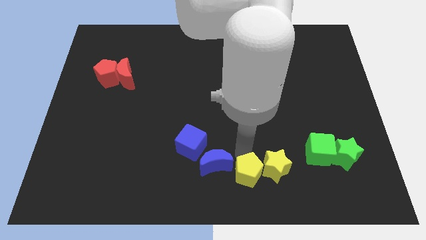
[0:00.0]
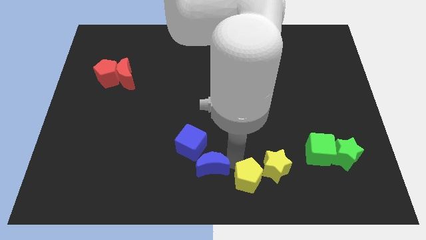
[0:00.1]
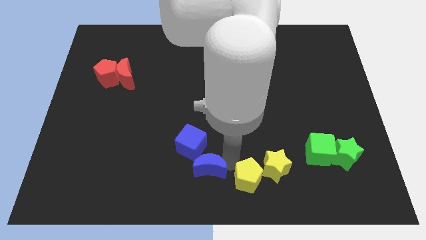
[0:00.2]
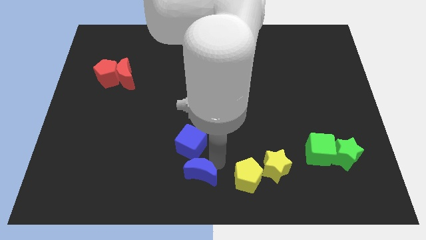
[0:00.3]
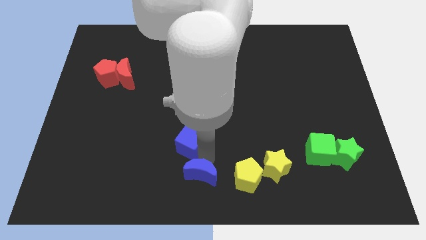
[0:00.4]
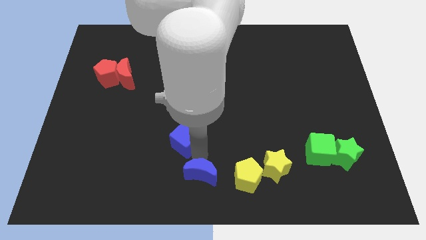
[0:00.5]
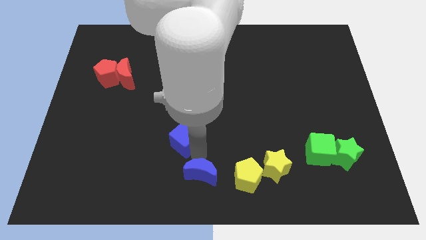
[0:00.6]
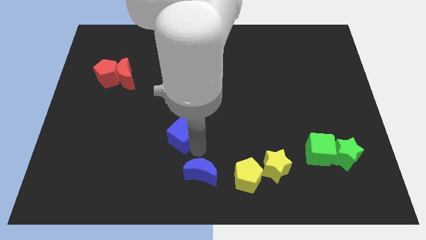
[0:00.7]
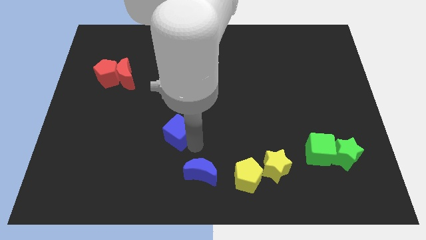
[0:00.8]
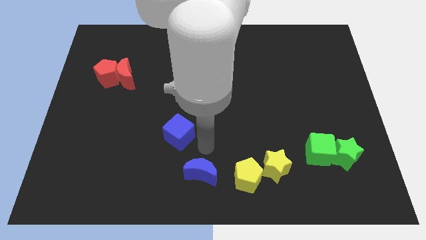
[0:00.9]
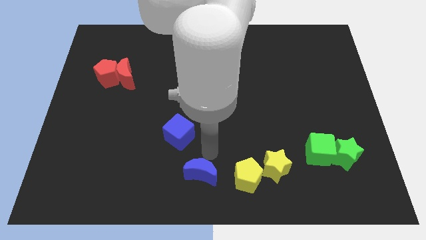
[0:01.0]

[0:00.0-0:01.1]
separate the blue cube from blue crescent

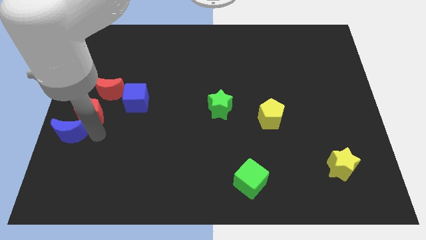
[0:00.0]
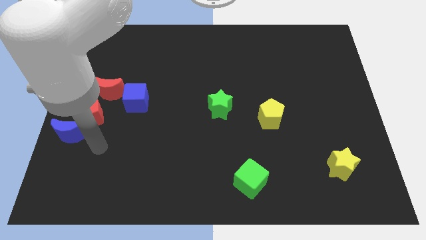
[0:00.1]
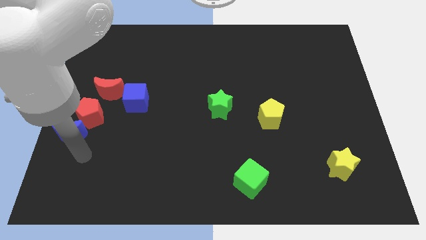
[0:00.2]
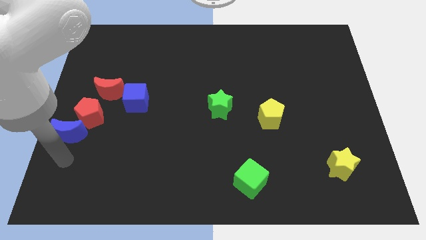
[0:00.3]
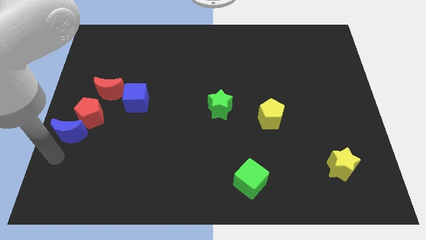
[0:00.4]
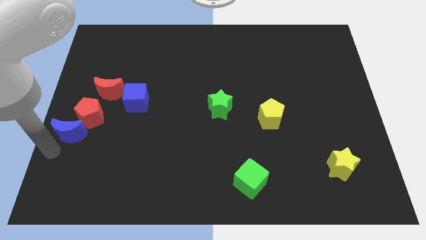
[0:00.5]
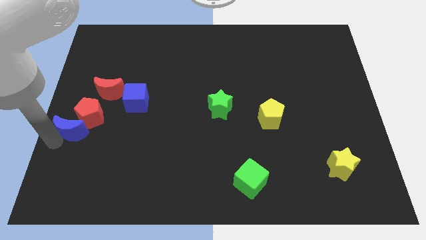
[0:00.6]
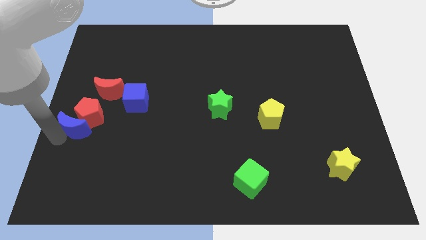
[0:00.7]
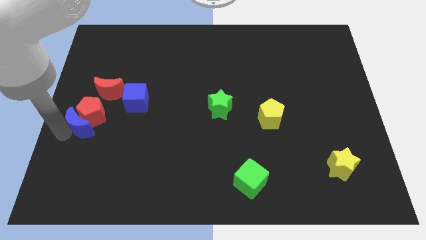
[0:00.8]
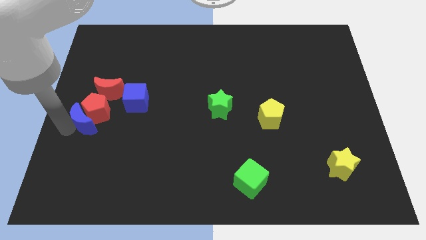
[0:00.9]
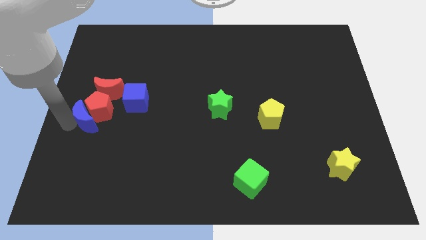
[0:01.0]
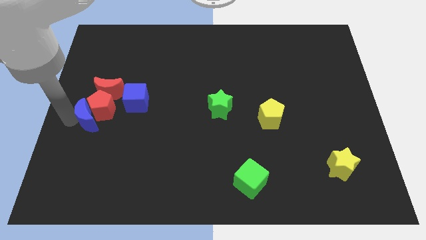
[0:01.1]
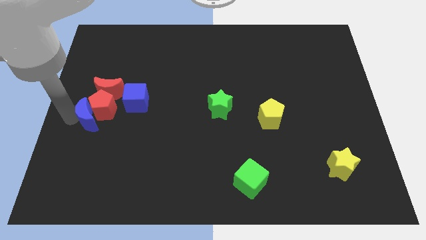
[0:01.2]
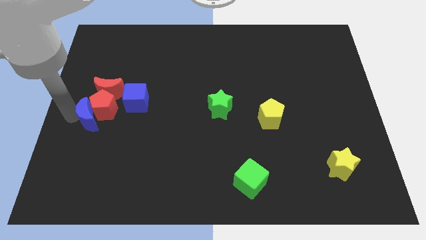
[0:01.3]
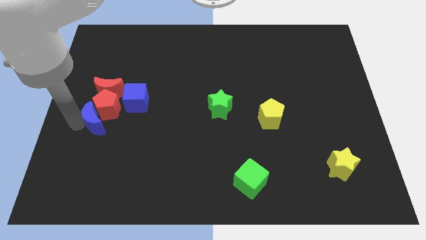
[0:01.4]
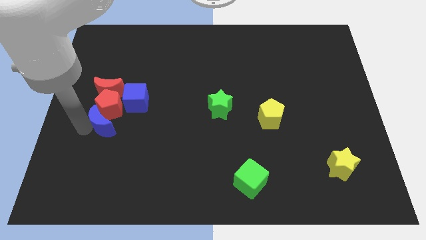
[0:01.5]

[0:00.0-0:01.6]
push the blue crescent into the red pentagon

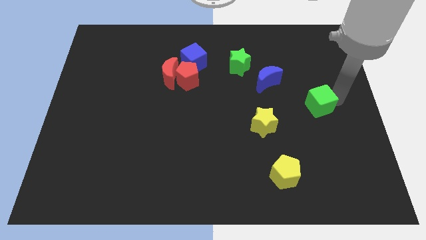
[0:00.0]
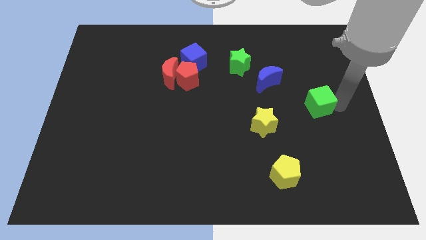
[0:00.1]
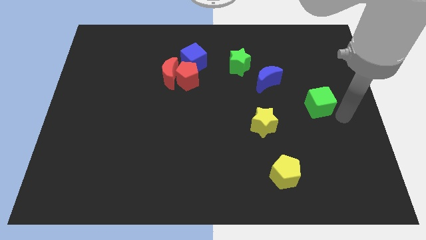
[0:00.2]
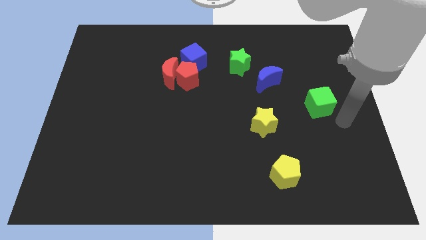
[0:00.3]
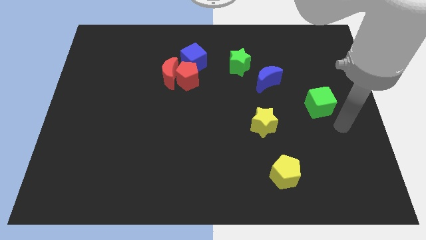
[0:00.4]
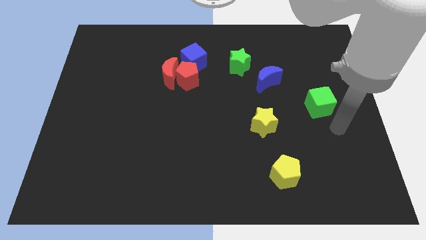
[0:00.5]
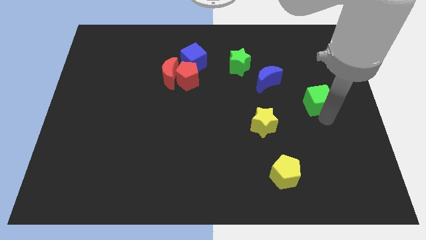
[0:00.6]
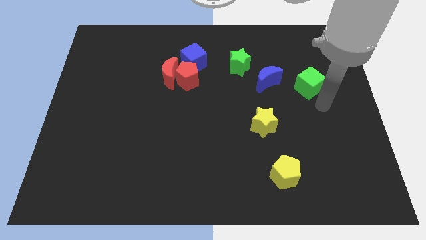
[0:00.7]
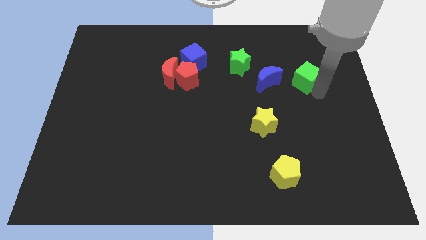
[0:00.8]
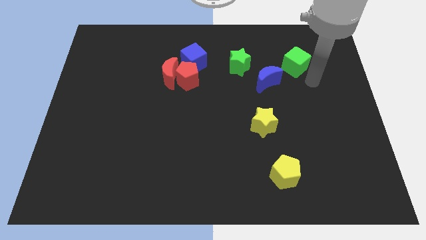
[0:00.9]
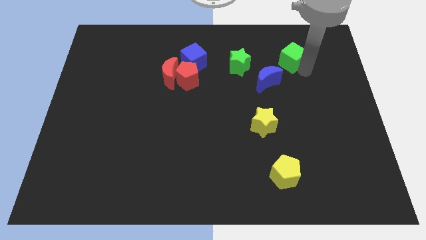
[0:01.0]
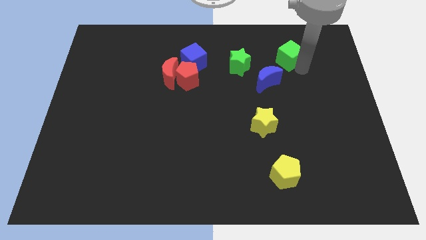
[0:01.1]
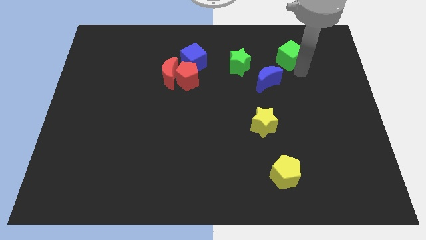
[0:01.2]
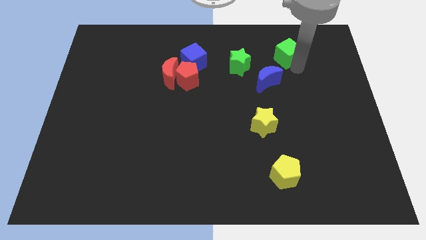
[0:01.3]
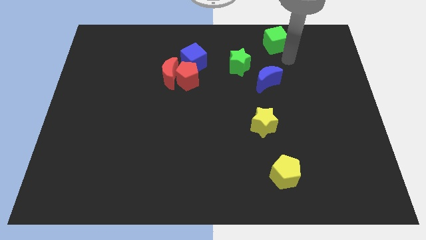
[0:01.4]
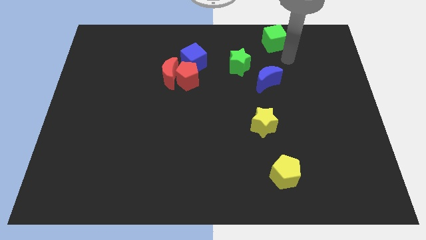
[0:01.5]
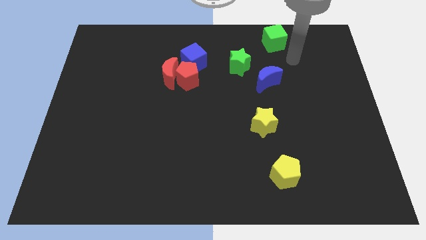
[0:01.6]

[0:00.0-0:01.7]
move the green cube above the blue crescent

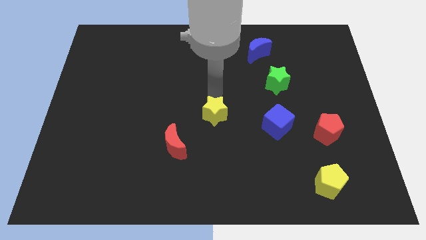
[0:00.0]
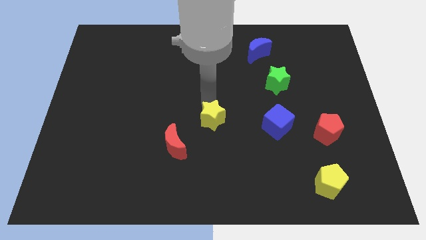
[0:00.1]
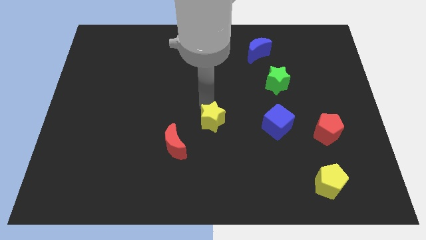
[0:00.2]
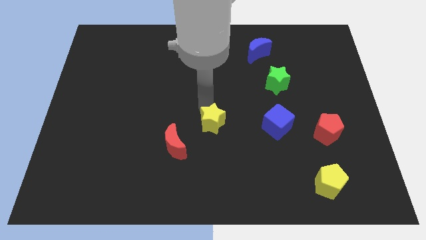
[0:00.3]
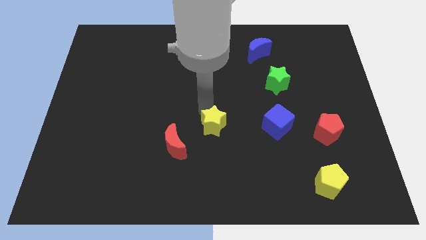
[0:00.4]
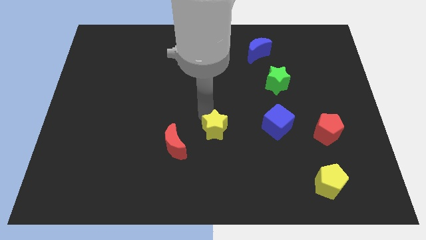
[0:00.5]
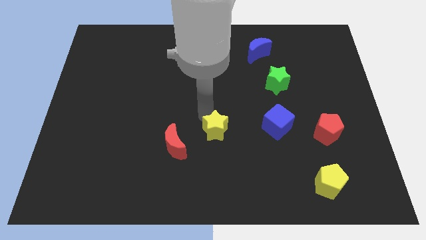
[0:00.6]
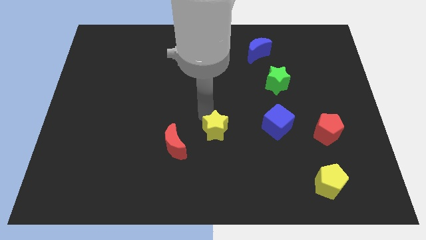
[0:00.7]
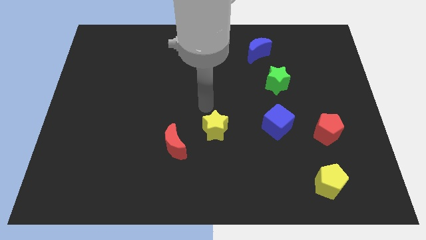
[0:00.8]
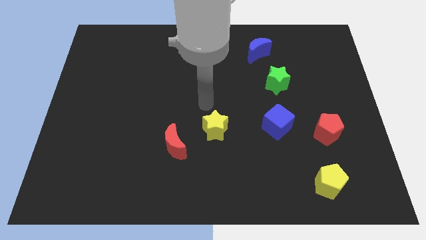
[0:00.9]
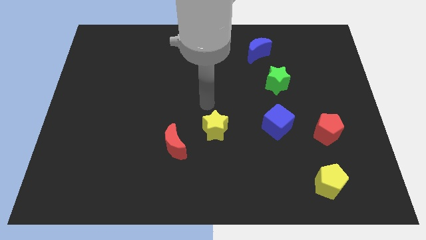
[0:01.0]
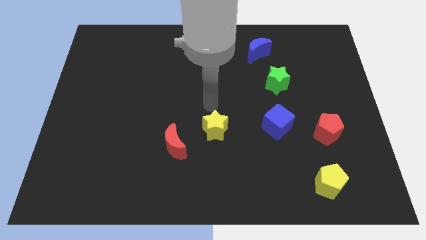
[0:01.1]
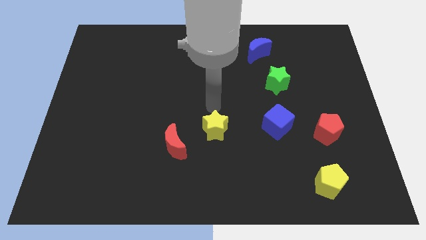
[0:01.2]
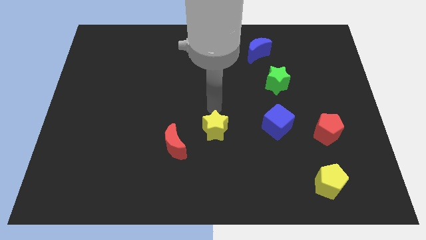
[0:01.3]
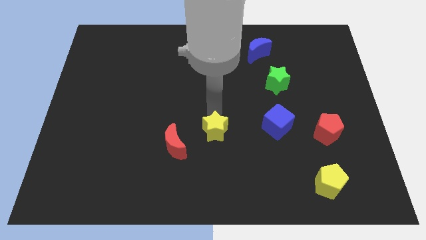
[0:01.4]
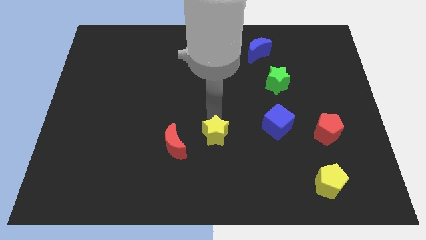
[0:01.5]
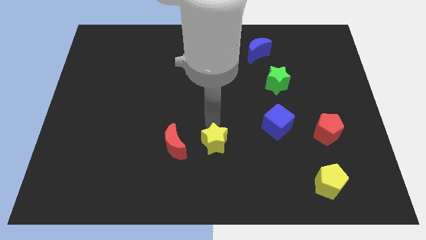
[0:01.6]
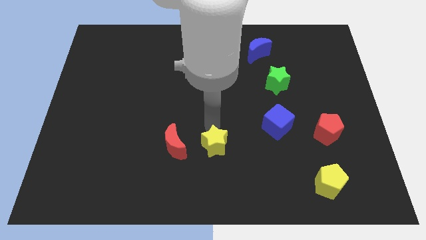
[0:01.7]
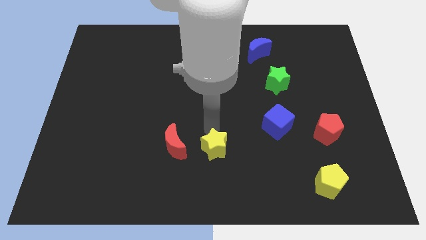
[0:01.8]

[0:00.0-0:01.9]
place the yellow star horizontally to the right side of the red crescent

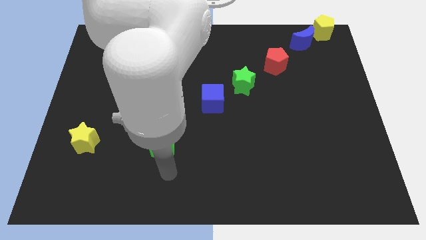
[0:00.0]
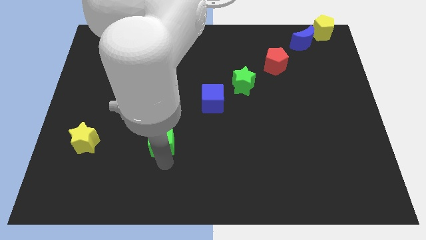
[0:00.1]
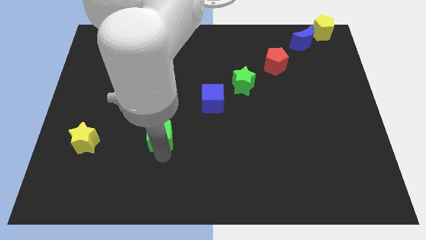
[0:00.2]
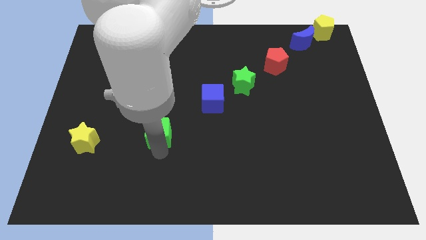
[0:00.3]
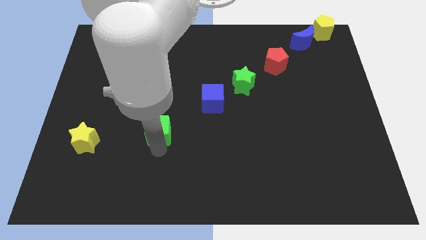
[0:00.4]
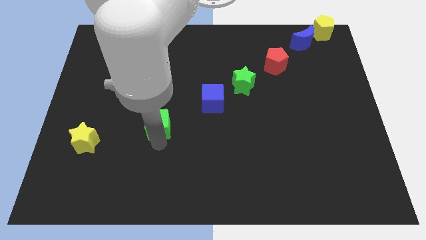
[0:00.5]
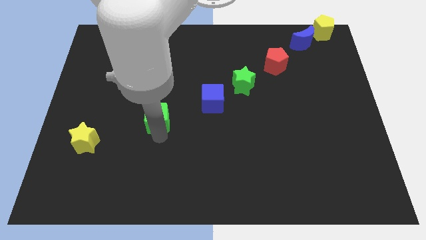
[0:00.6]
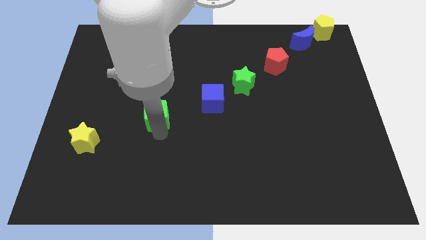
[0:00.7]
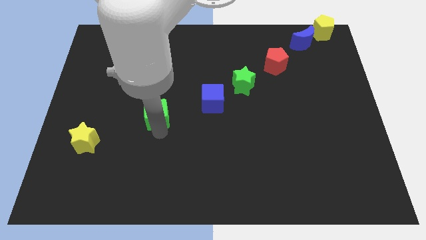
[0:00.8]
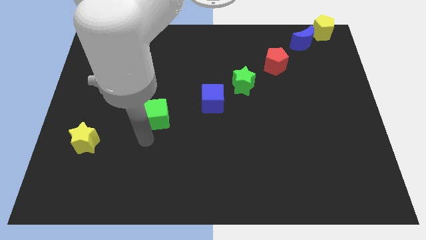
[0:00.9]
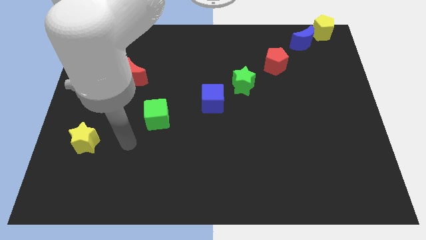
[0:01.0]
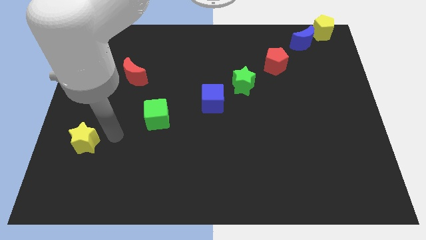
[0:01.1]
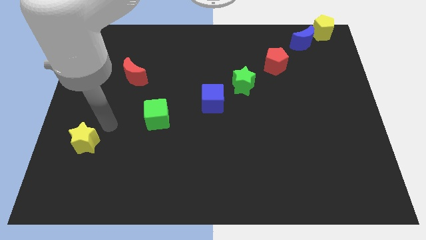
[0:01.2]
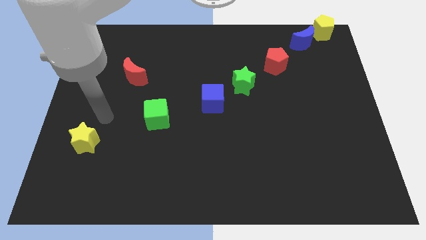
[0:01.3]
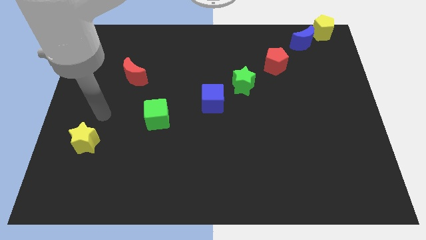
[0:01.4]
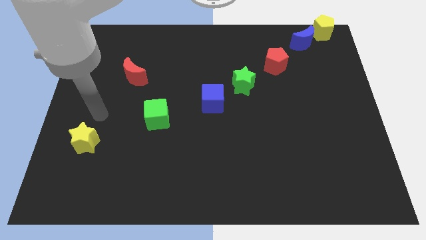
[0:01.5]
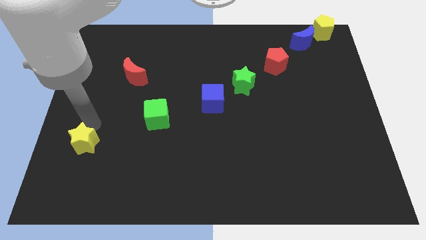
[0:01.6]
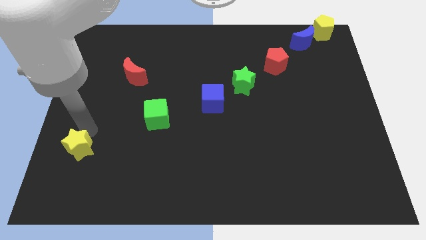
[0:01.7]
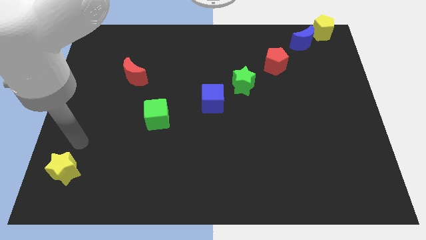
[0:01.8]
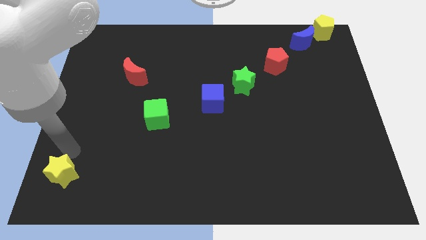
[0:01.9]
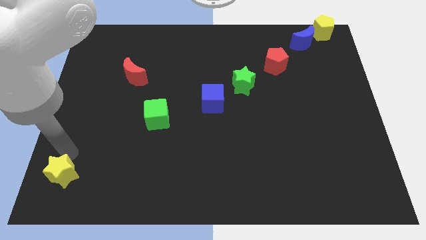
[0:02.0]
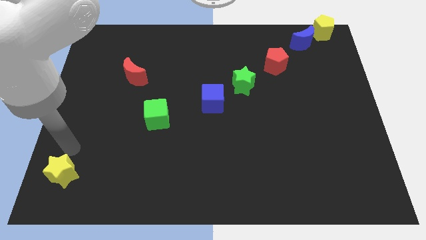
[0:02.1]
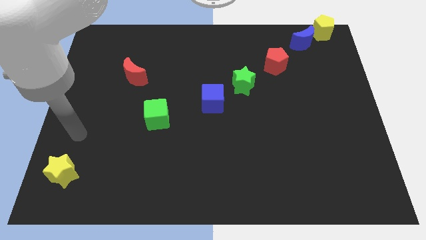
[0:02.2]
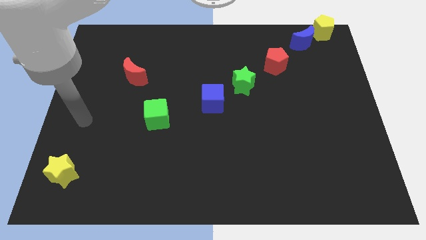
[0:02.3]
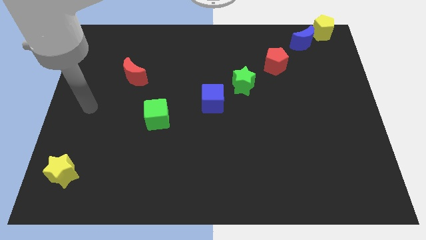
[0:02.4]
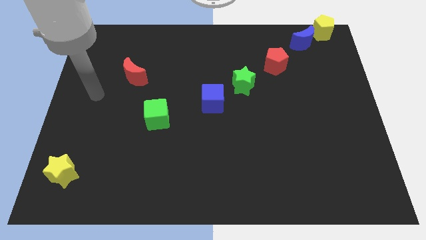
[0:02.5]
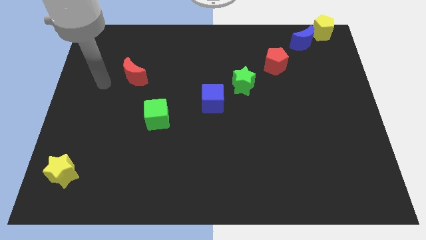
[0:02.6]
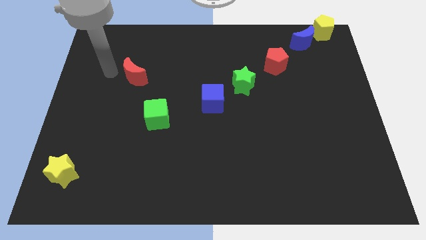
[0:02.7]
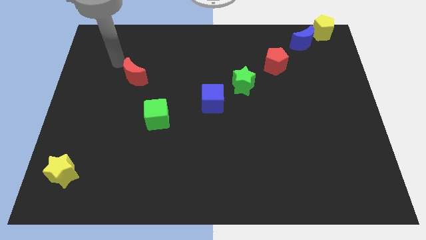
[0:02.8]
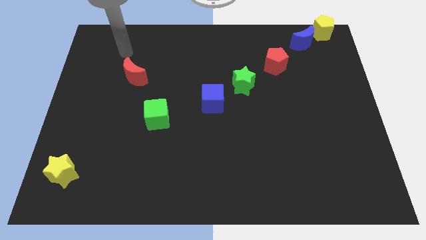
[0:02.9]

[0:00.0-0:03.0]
separate the green cube and yellow star
